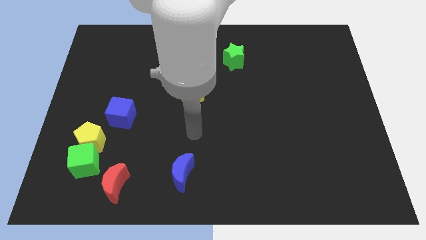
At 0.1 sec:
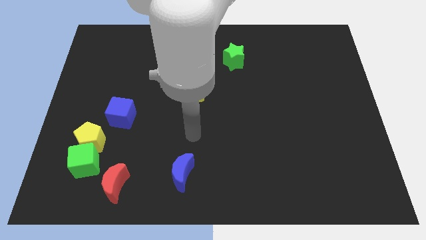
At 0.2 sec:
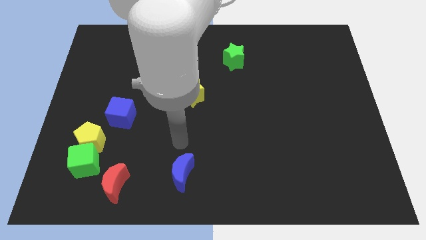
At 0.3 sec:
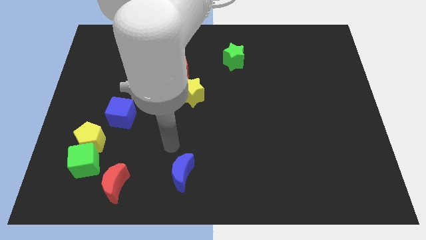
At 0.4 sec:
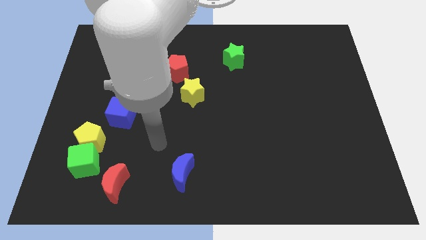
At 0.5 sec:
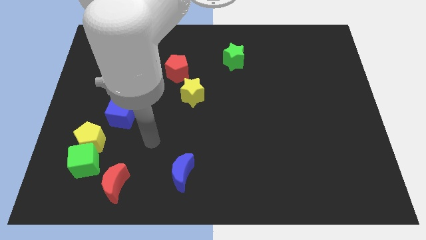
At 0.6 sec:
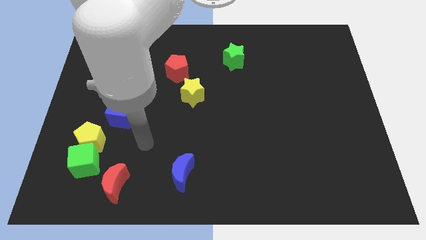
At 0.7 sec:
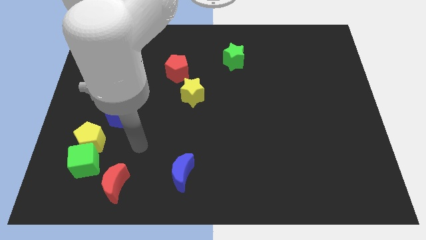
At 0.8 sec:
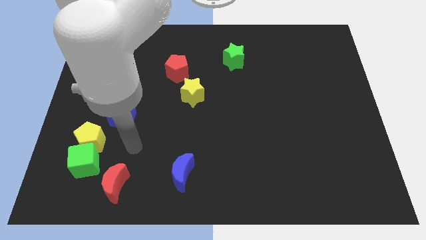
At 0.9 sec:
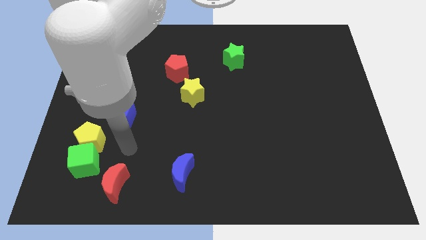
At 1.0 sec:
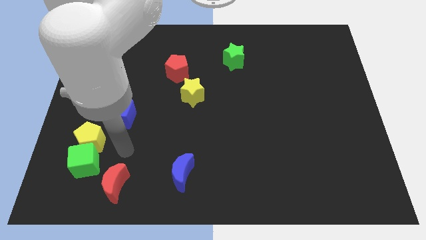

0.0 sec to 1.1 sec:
place your arm at the top of the red crescent

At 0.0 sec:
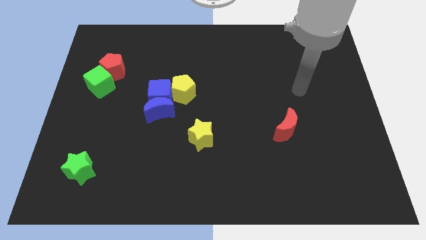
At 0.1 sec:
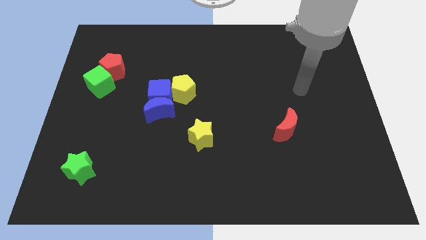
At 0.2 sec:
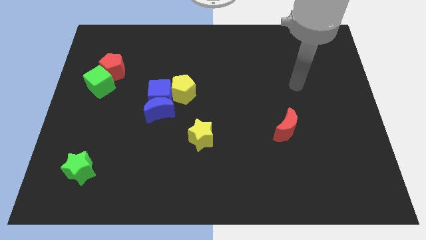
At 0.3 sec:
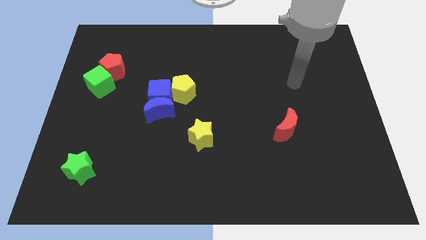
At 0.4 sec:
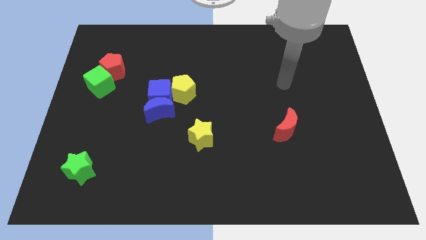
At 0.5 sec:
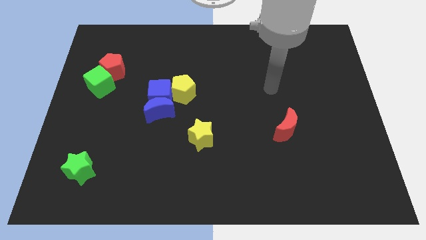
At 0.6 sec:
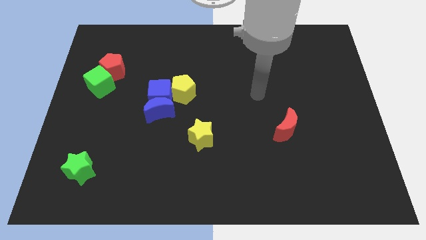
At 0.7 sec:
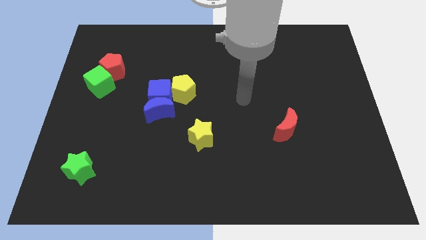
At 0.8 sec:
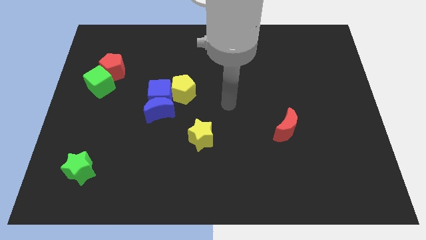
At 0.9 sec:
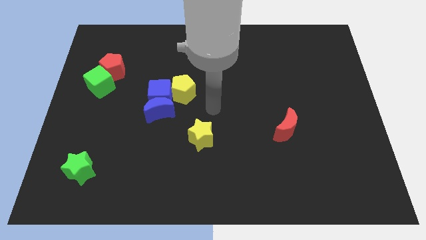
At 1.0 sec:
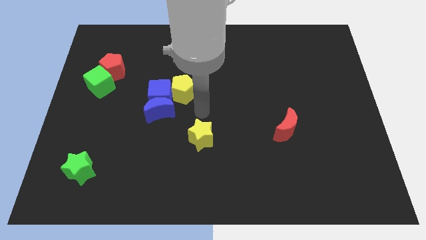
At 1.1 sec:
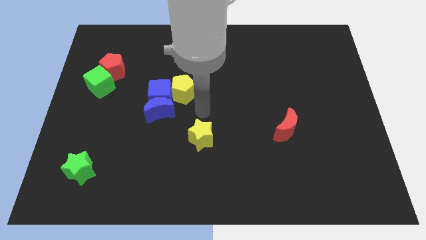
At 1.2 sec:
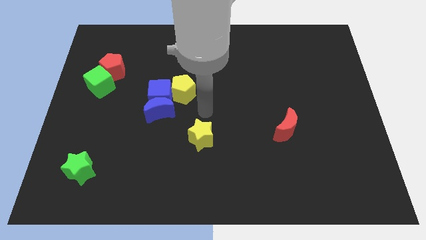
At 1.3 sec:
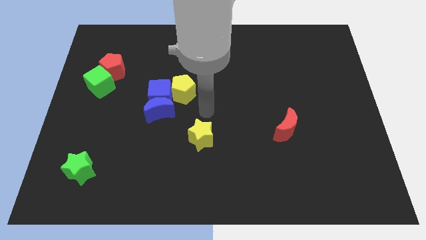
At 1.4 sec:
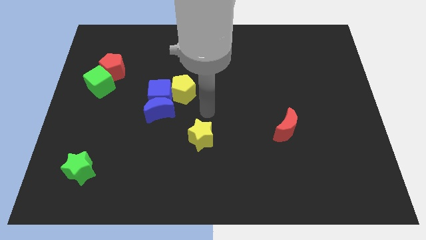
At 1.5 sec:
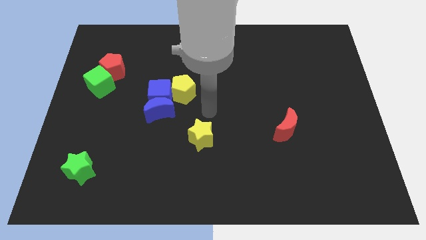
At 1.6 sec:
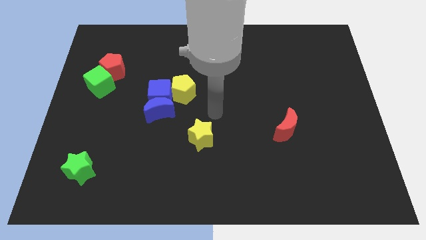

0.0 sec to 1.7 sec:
move your arm towards the yellow star

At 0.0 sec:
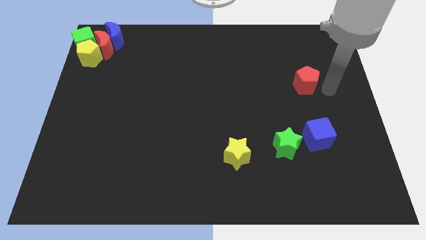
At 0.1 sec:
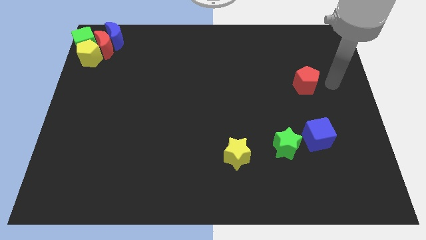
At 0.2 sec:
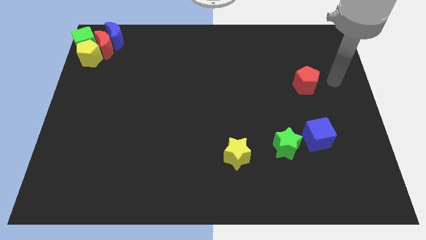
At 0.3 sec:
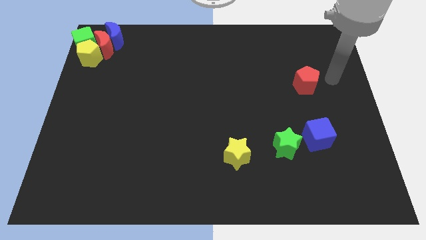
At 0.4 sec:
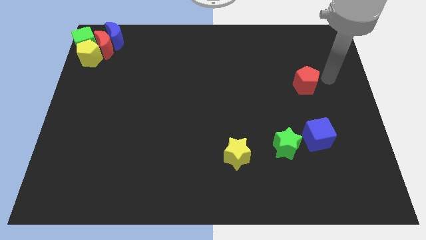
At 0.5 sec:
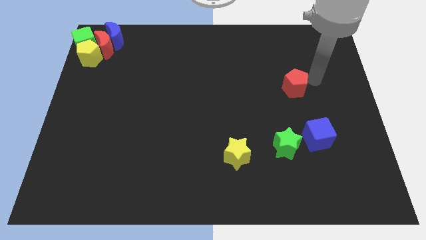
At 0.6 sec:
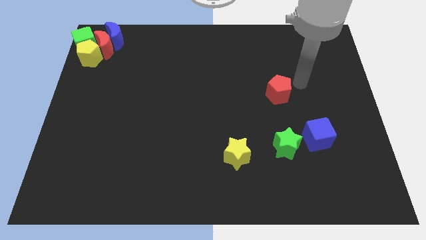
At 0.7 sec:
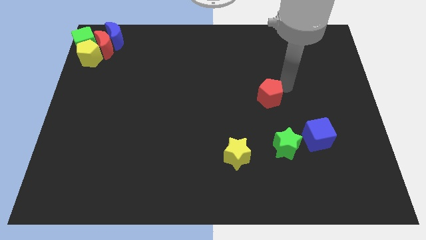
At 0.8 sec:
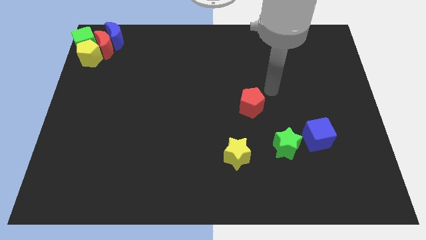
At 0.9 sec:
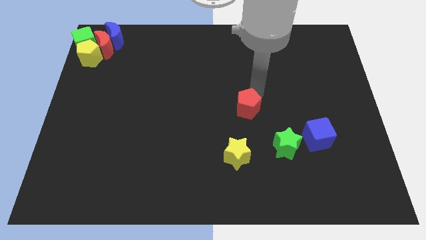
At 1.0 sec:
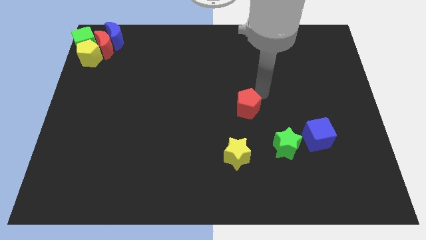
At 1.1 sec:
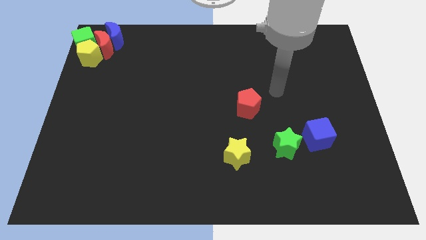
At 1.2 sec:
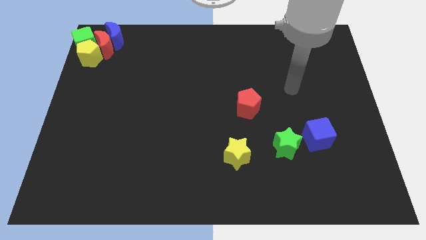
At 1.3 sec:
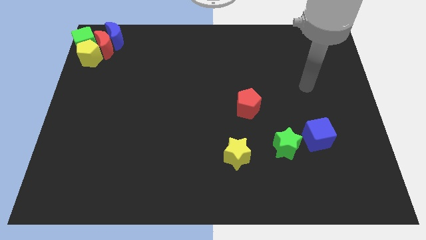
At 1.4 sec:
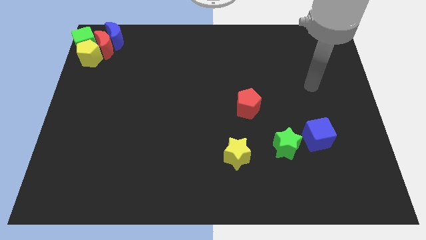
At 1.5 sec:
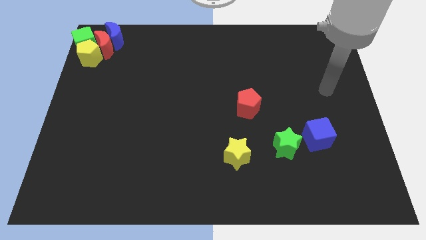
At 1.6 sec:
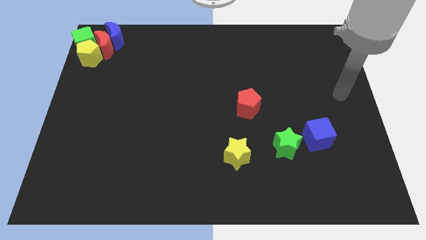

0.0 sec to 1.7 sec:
move the red pentagon diagonally on the top right side of the yellow star

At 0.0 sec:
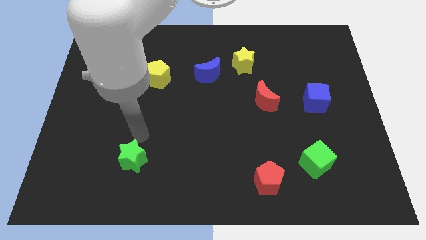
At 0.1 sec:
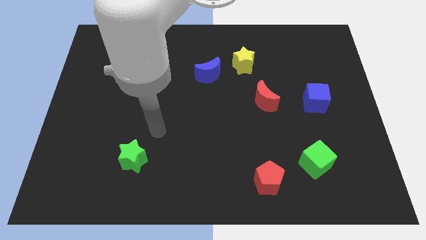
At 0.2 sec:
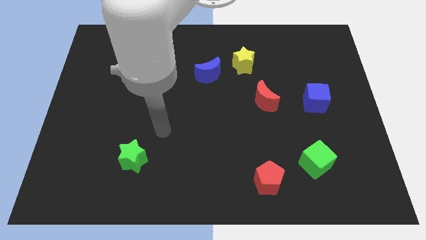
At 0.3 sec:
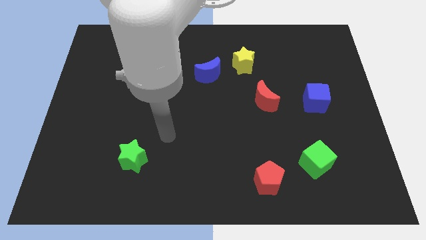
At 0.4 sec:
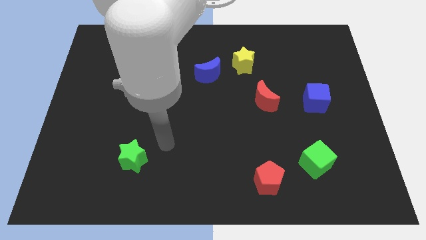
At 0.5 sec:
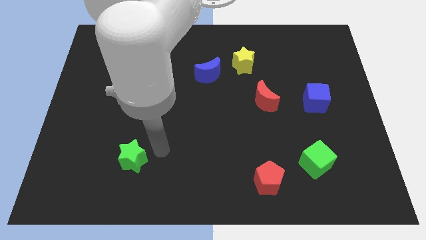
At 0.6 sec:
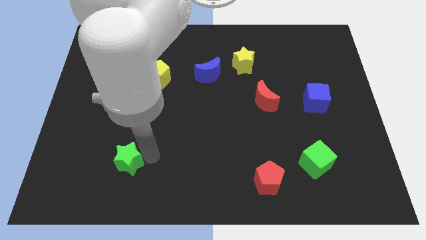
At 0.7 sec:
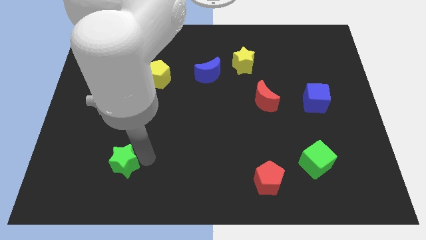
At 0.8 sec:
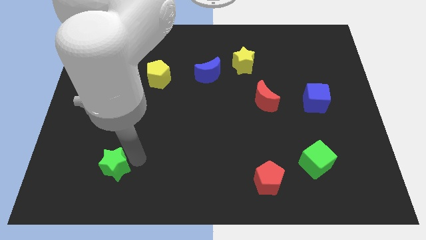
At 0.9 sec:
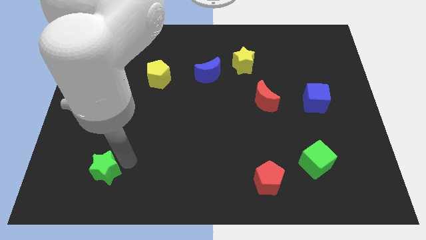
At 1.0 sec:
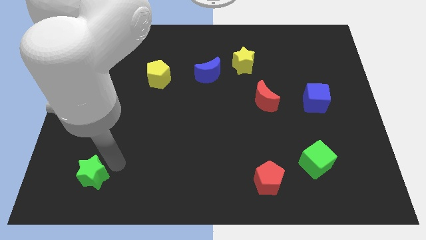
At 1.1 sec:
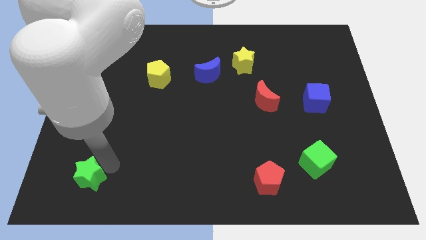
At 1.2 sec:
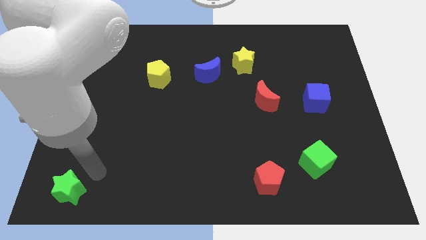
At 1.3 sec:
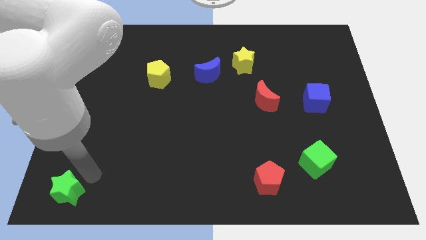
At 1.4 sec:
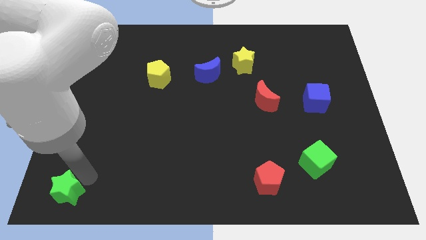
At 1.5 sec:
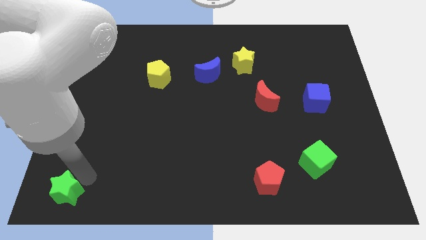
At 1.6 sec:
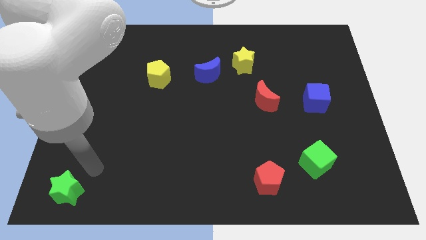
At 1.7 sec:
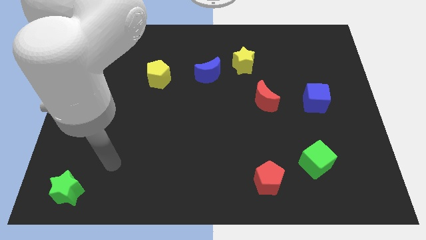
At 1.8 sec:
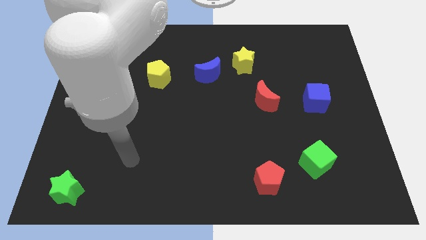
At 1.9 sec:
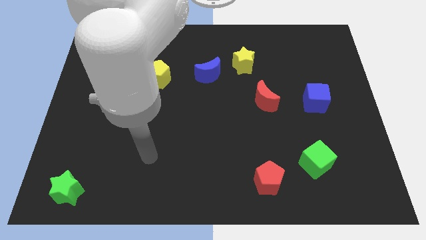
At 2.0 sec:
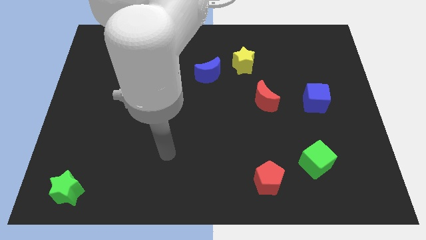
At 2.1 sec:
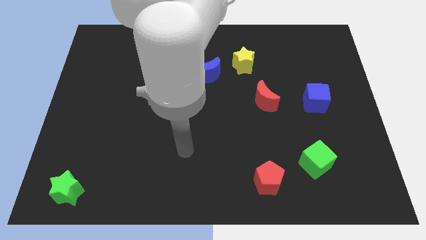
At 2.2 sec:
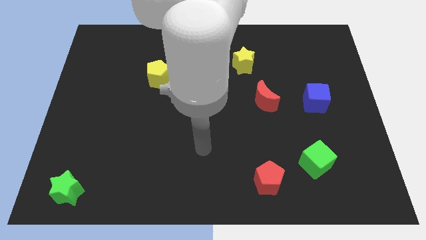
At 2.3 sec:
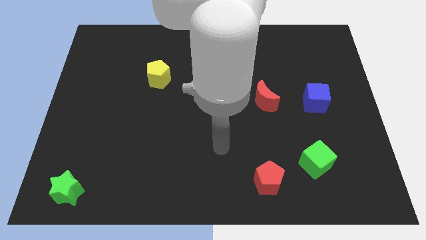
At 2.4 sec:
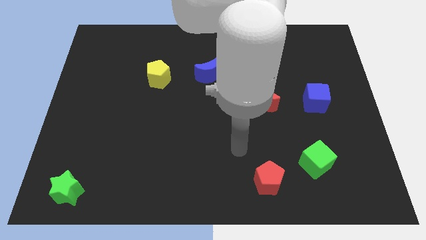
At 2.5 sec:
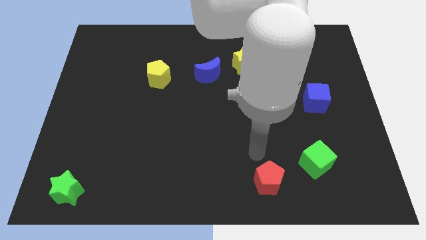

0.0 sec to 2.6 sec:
push the green star to the bottom left of the board

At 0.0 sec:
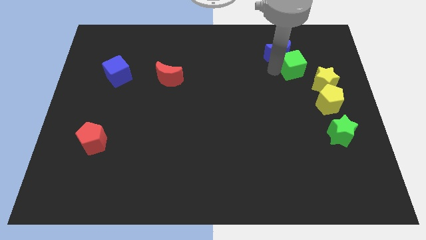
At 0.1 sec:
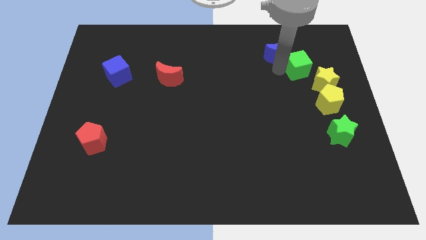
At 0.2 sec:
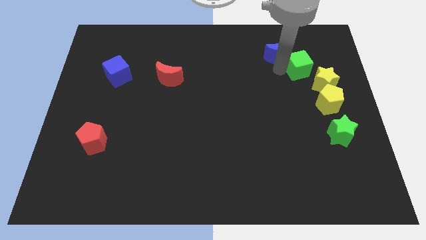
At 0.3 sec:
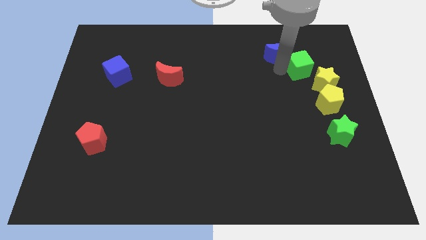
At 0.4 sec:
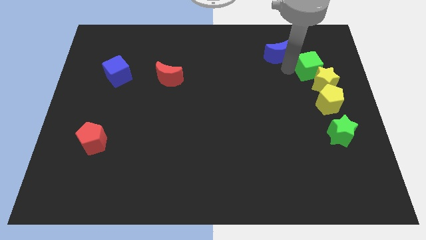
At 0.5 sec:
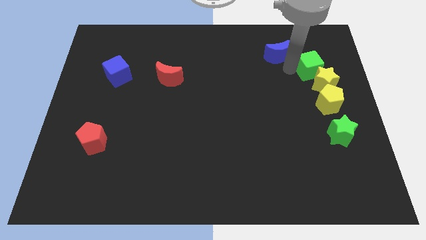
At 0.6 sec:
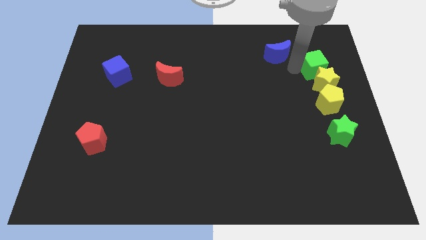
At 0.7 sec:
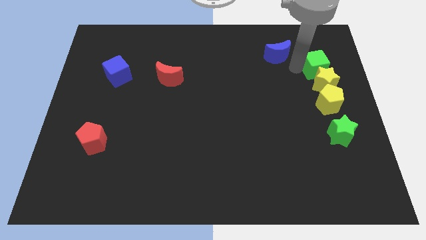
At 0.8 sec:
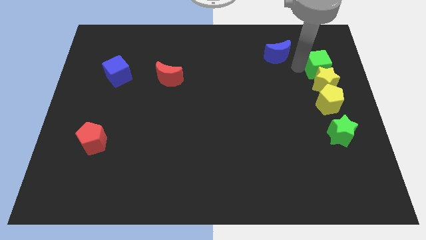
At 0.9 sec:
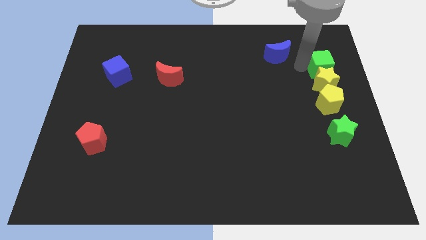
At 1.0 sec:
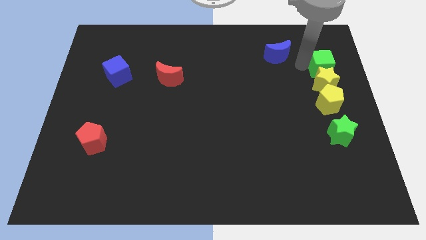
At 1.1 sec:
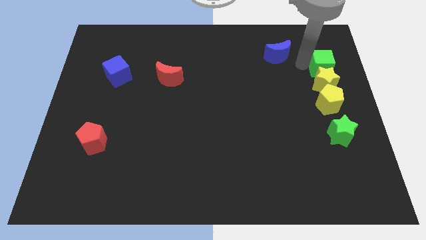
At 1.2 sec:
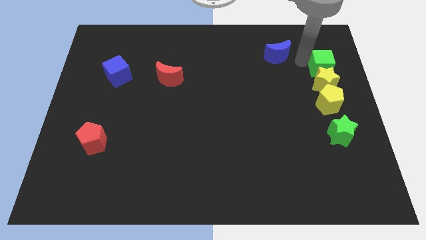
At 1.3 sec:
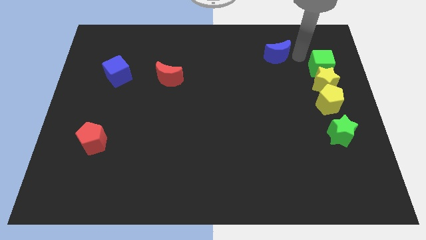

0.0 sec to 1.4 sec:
put the green cube above the yellow star

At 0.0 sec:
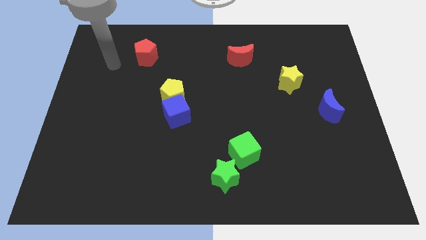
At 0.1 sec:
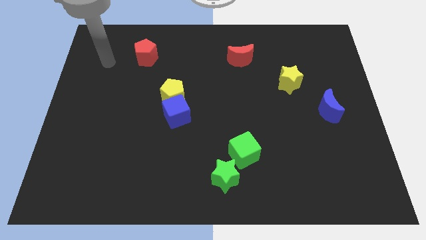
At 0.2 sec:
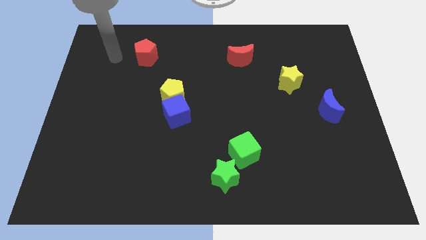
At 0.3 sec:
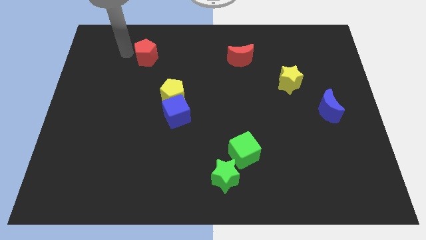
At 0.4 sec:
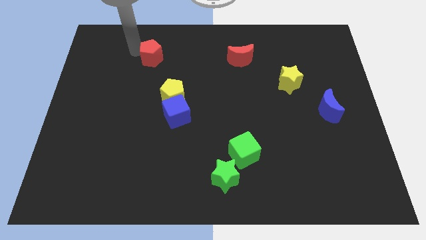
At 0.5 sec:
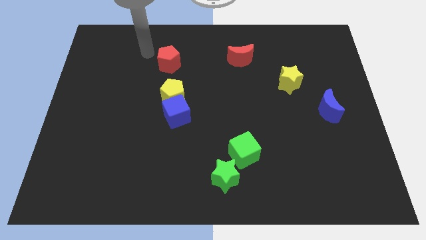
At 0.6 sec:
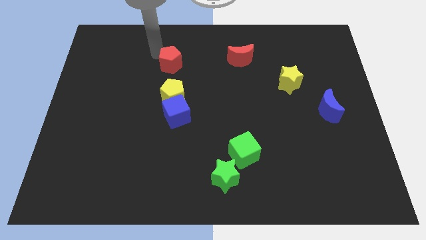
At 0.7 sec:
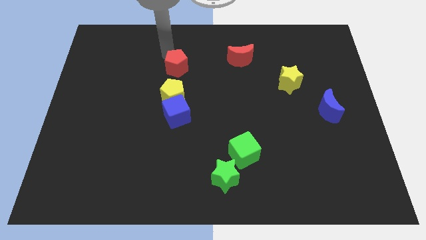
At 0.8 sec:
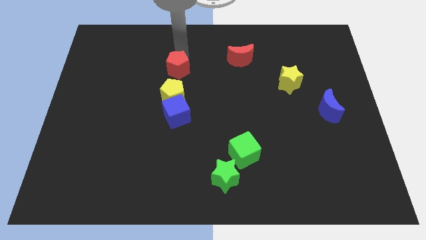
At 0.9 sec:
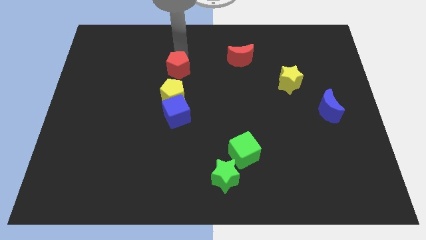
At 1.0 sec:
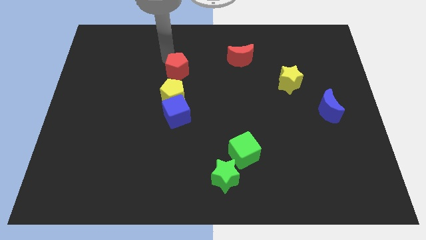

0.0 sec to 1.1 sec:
place red pentagon to the top of yellow pentagon
